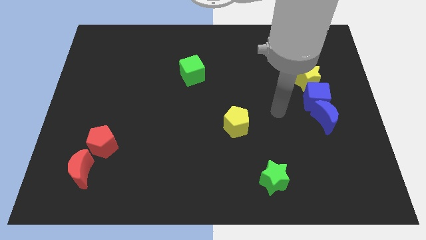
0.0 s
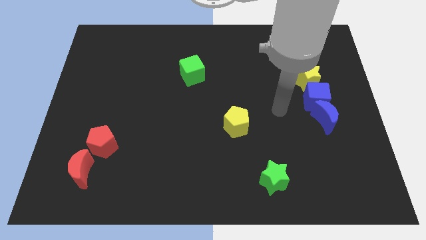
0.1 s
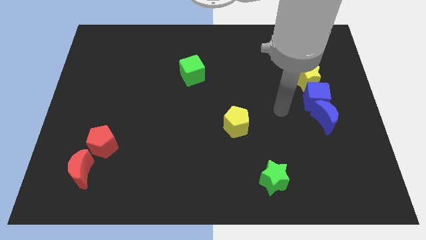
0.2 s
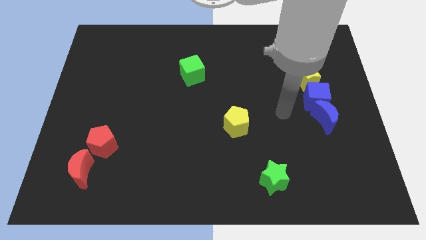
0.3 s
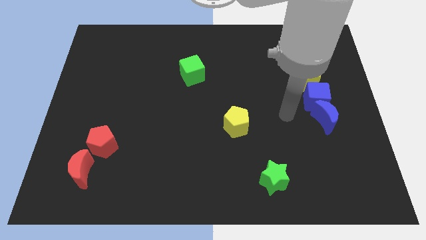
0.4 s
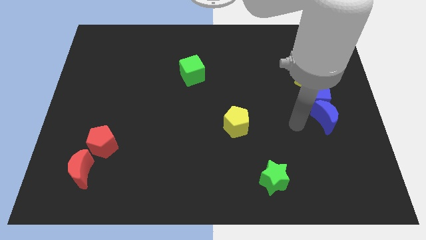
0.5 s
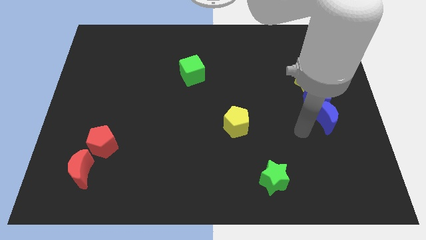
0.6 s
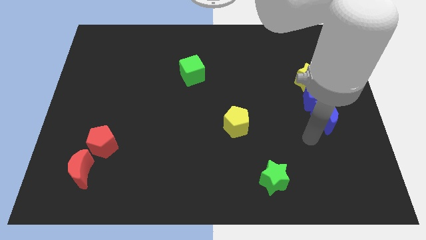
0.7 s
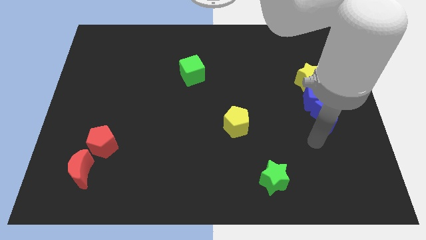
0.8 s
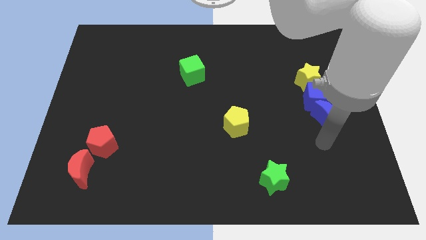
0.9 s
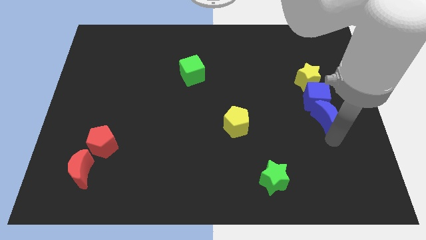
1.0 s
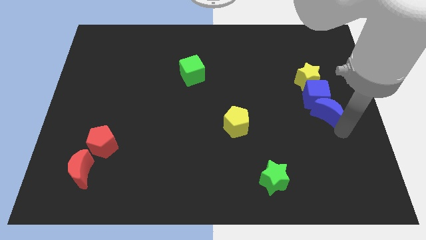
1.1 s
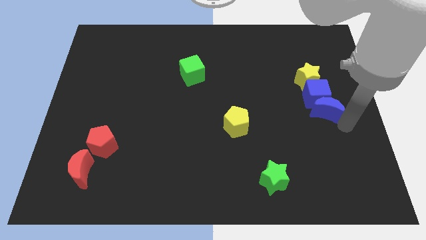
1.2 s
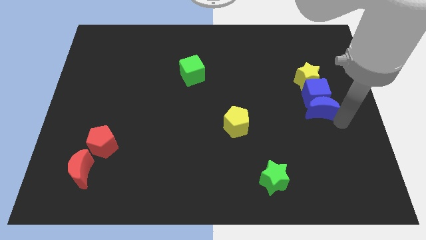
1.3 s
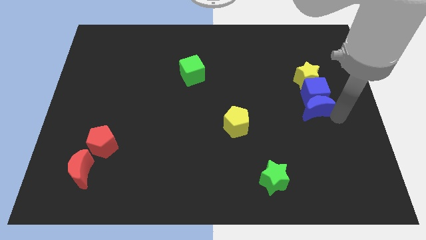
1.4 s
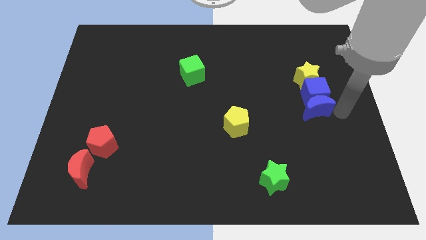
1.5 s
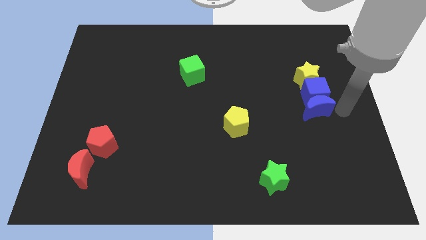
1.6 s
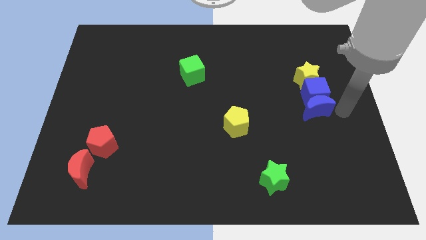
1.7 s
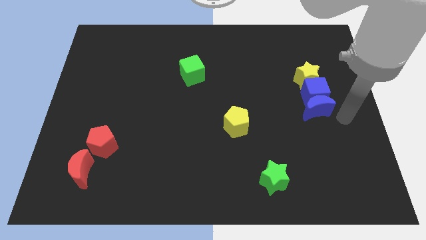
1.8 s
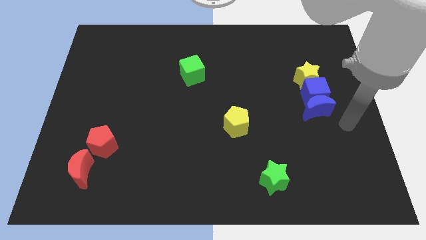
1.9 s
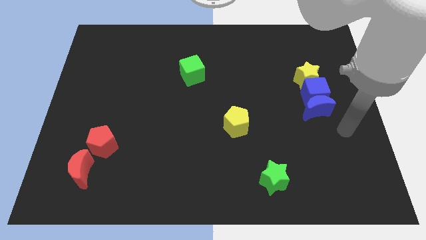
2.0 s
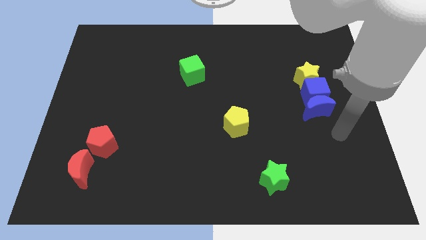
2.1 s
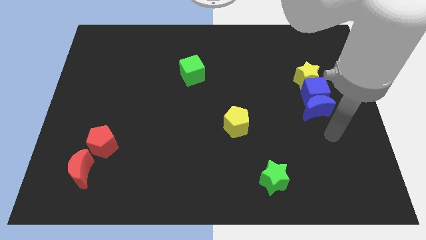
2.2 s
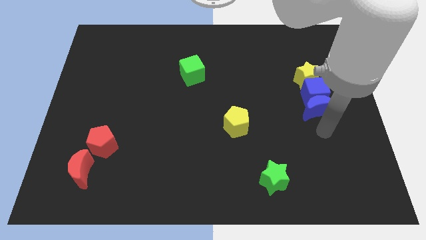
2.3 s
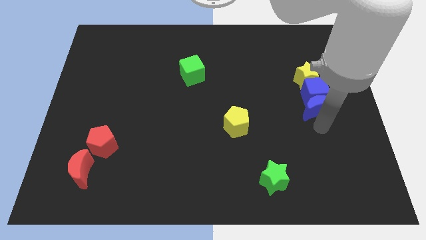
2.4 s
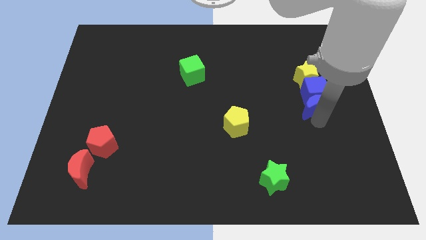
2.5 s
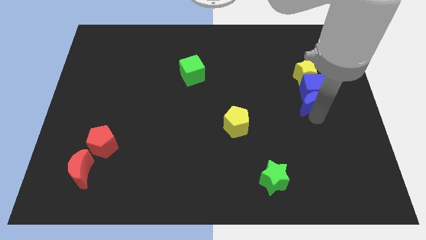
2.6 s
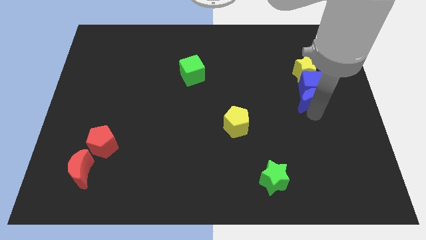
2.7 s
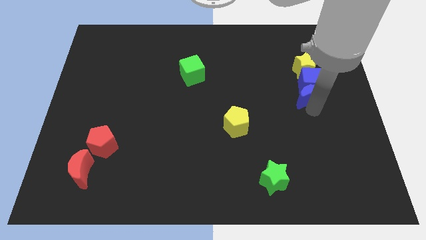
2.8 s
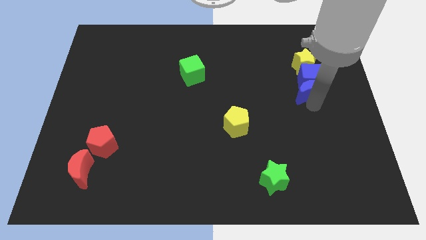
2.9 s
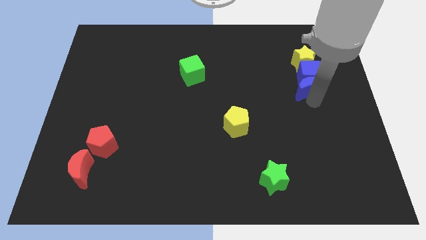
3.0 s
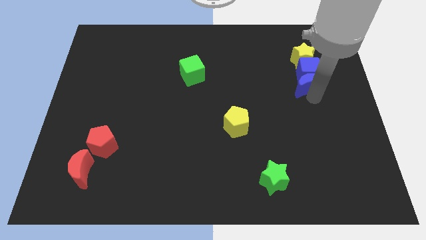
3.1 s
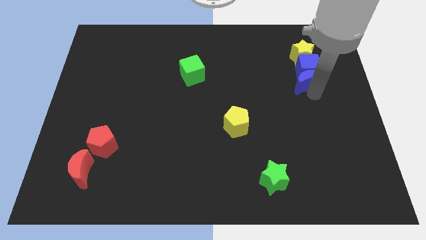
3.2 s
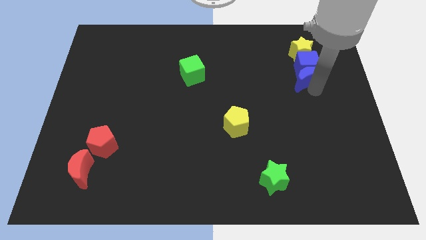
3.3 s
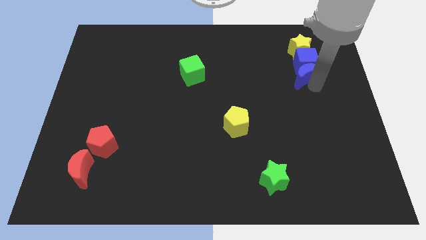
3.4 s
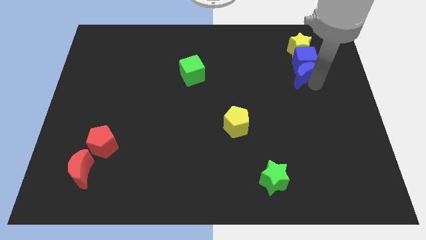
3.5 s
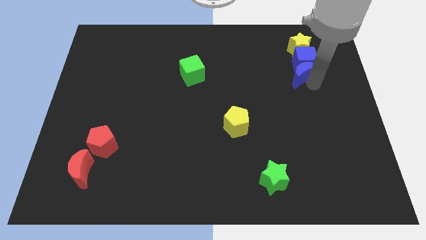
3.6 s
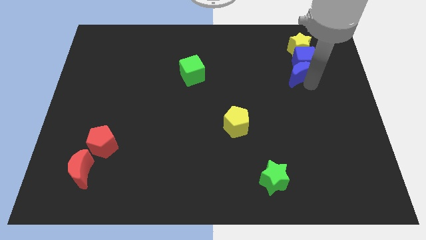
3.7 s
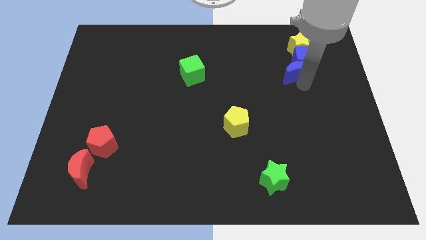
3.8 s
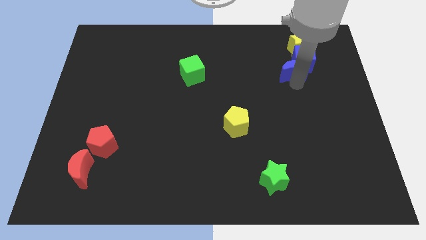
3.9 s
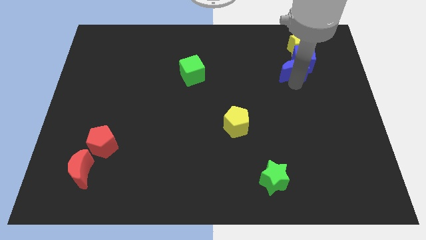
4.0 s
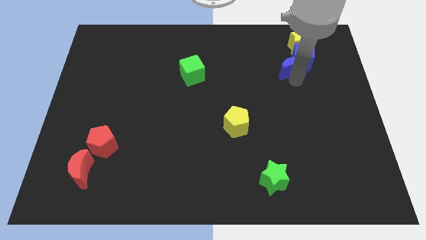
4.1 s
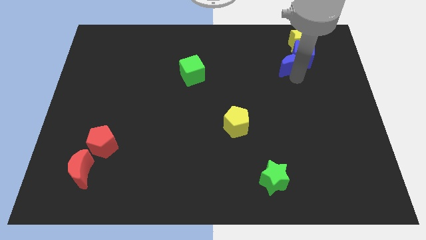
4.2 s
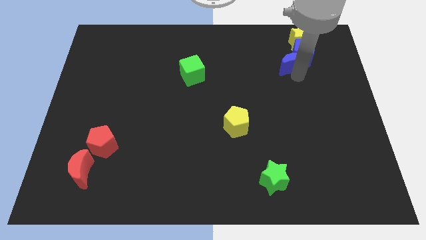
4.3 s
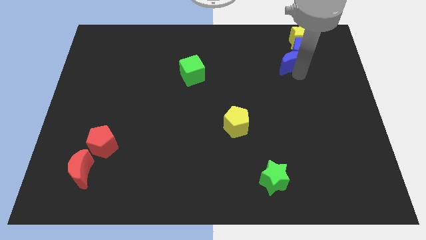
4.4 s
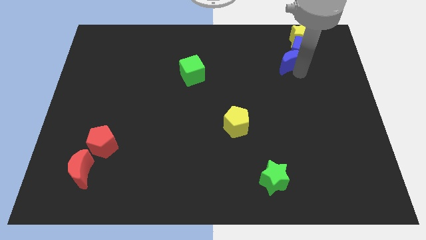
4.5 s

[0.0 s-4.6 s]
move the vertical line of blocks to the top

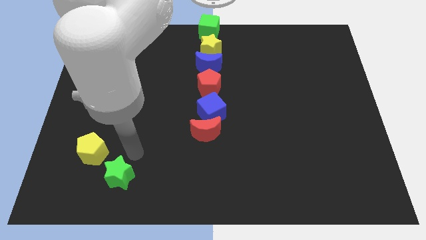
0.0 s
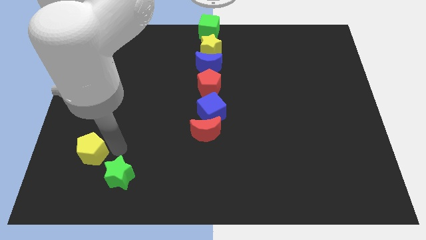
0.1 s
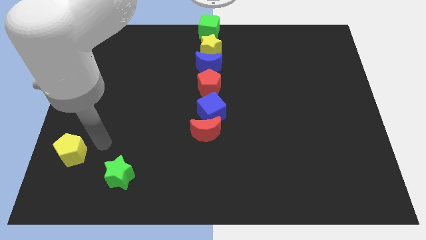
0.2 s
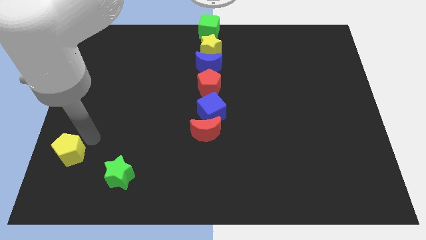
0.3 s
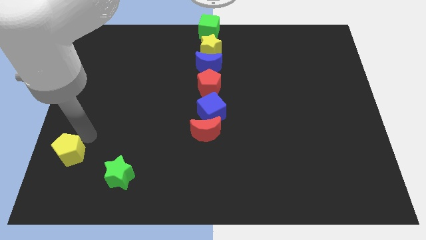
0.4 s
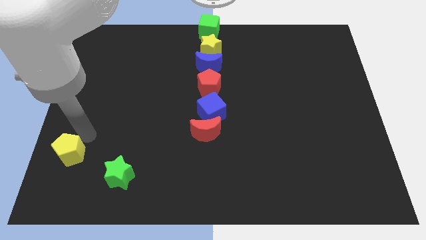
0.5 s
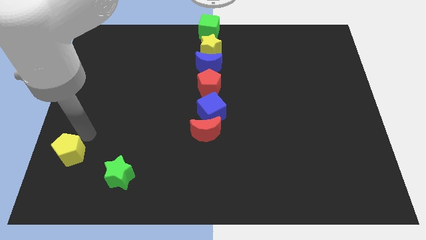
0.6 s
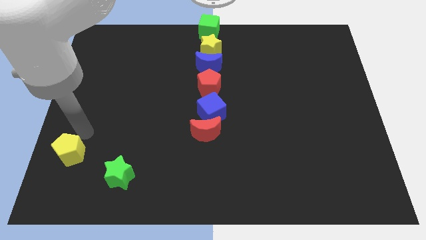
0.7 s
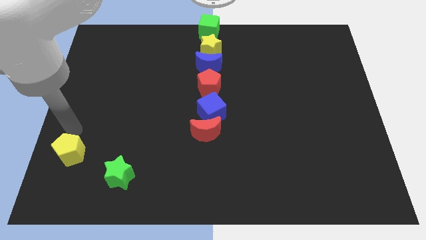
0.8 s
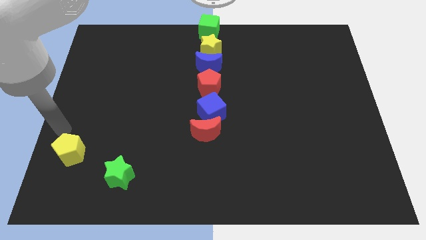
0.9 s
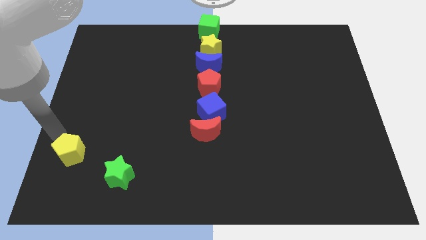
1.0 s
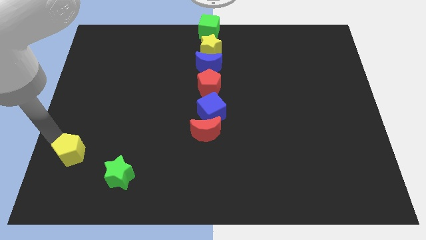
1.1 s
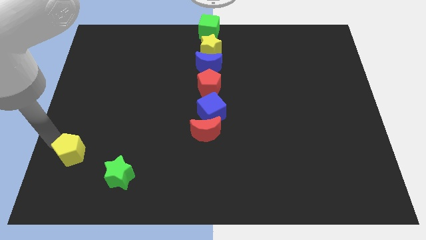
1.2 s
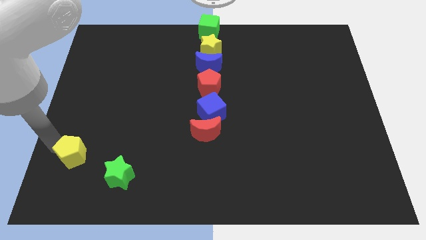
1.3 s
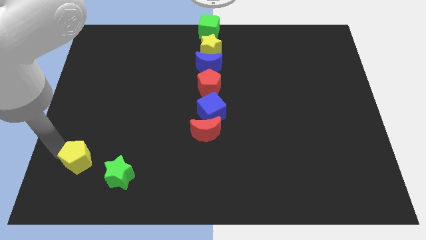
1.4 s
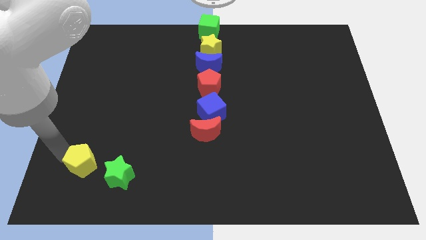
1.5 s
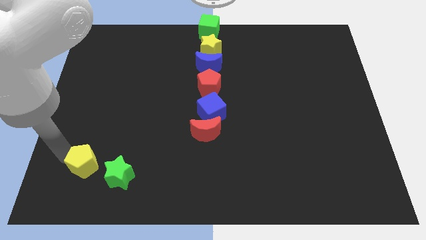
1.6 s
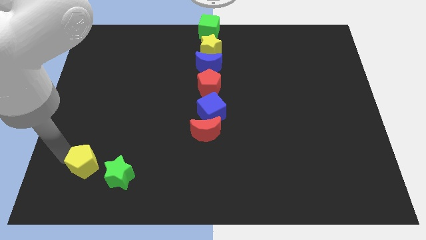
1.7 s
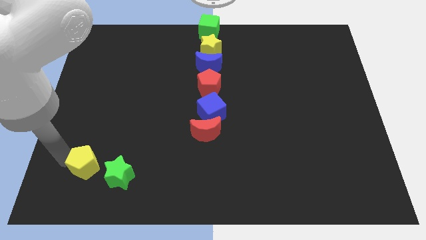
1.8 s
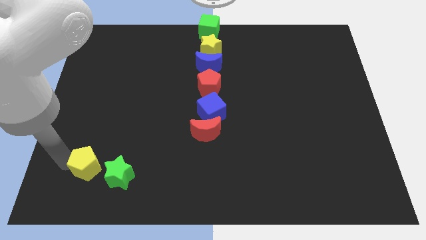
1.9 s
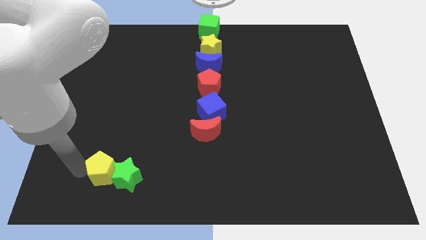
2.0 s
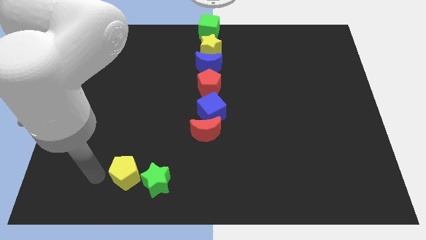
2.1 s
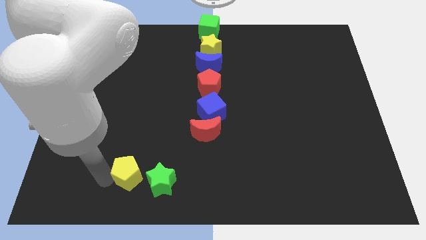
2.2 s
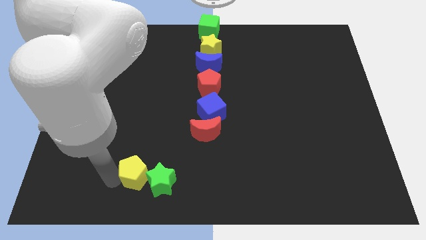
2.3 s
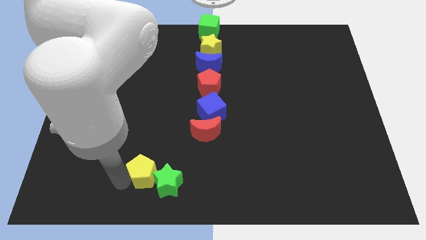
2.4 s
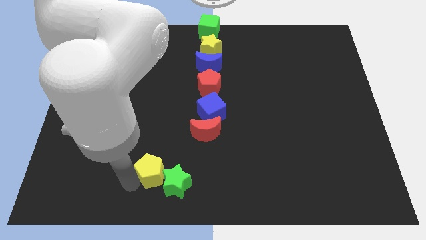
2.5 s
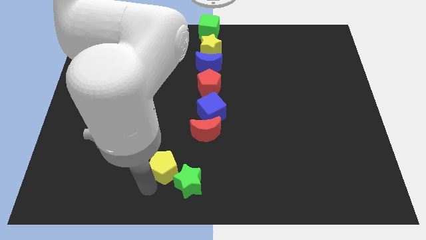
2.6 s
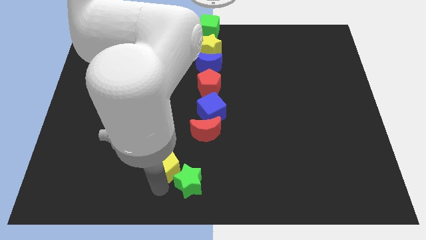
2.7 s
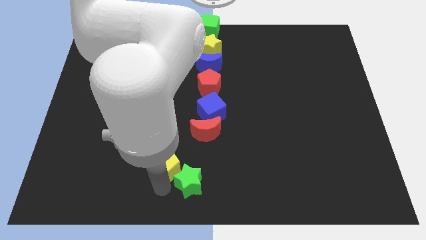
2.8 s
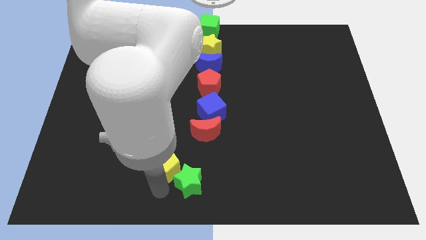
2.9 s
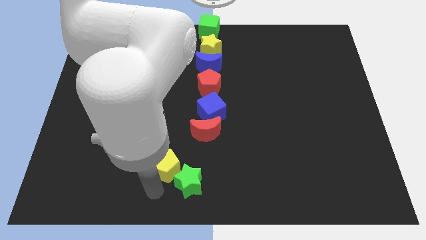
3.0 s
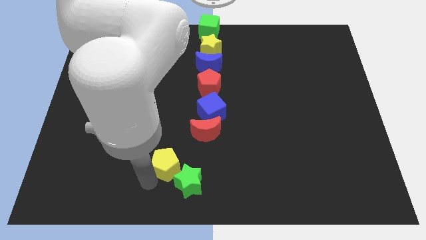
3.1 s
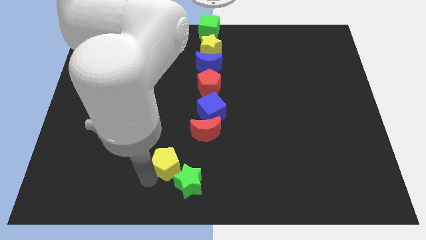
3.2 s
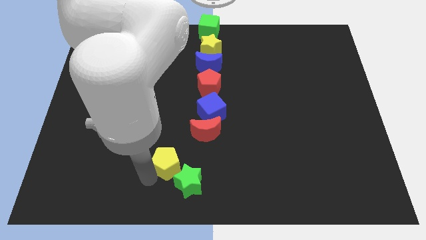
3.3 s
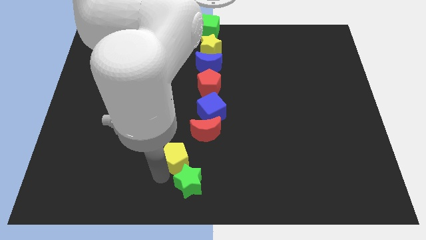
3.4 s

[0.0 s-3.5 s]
push the yellow pentagon and green star towards the bottom center of the board

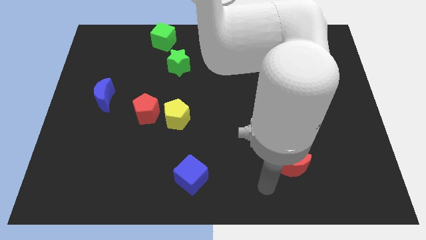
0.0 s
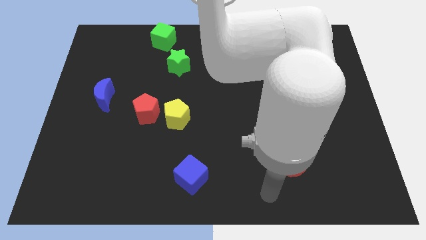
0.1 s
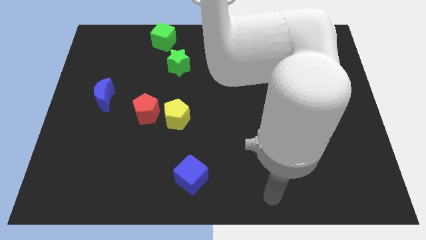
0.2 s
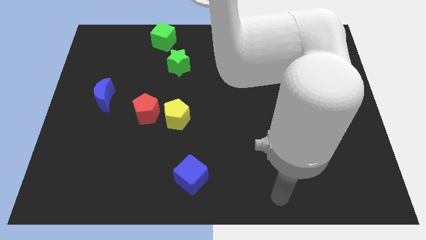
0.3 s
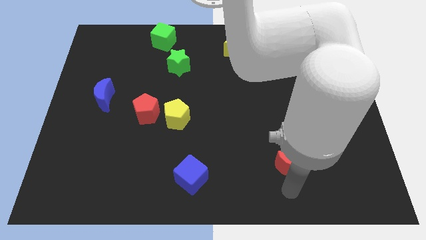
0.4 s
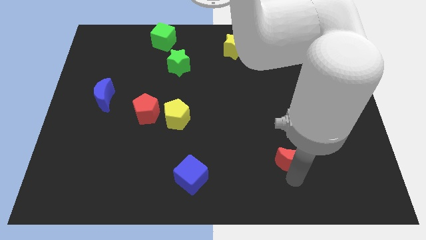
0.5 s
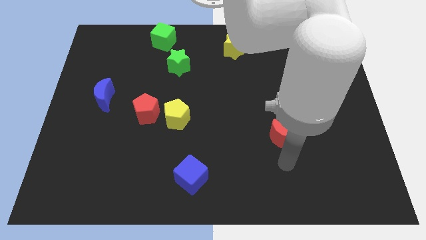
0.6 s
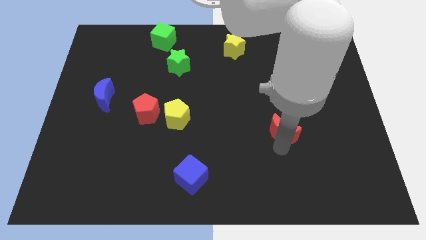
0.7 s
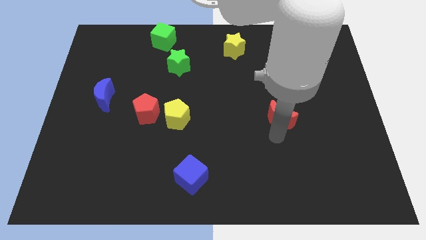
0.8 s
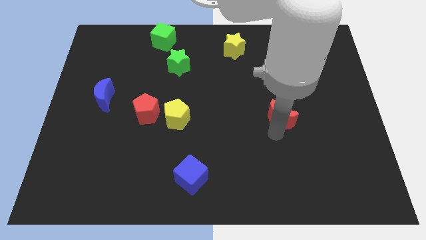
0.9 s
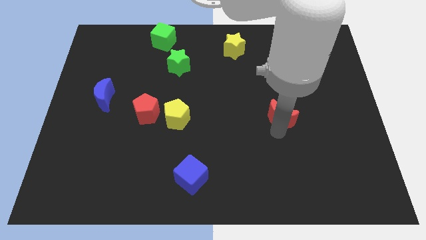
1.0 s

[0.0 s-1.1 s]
move the red crescent to the right side of the yellow pentagon
